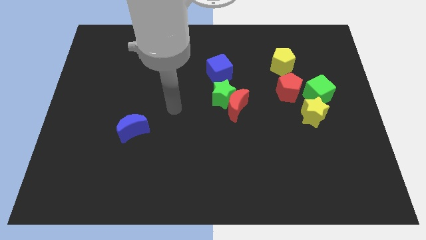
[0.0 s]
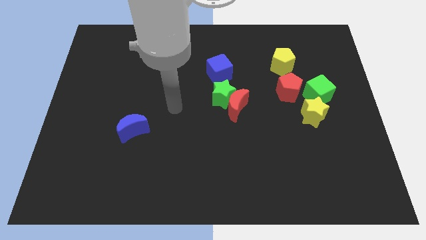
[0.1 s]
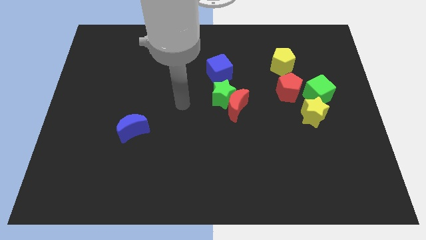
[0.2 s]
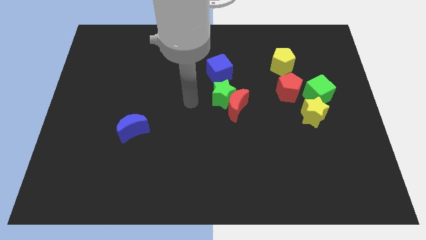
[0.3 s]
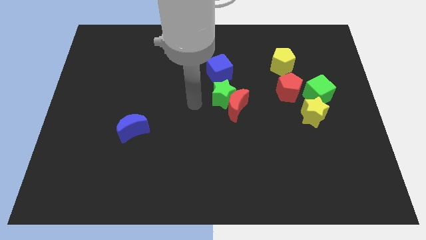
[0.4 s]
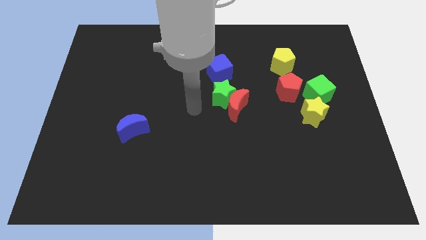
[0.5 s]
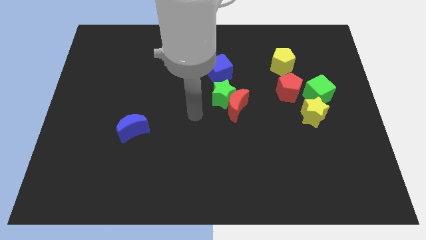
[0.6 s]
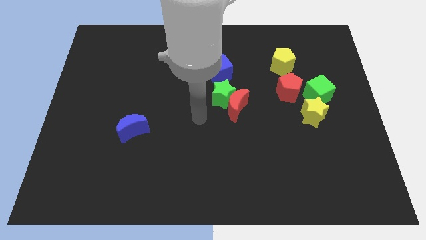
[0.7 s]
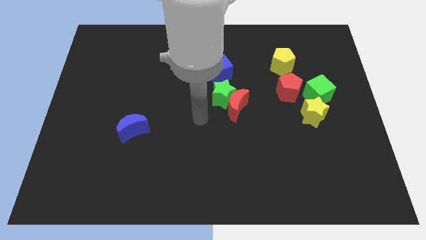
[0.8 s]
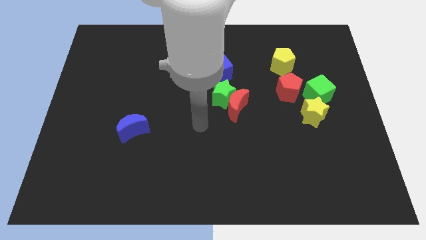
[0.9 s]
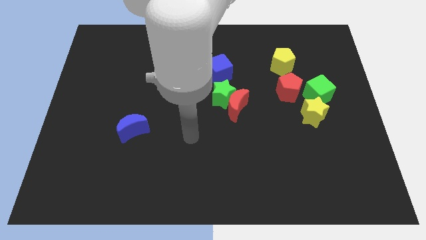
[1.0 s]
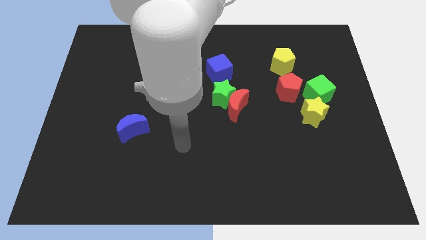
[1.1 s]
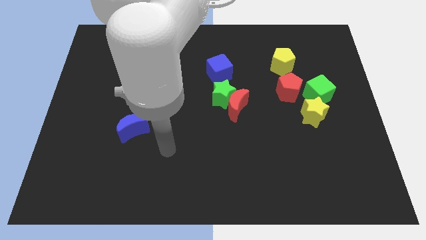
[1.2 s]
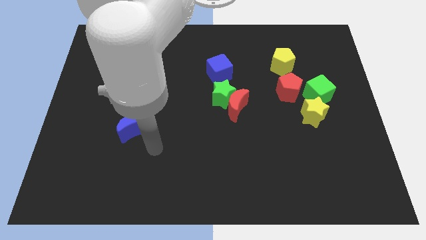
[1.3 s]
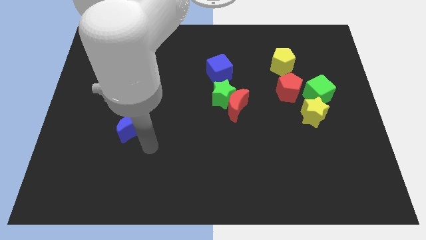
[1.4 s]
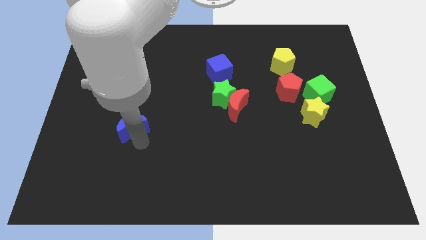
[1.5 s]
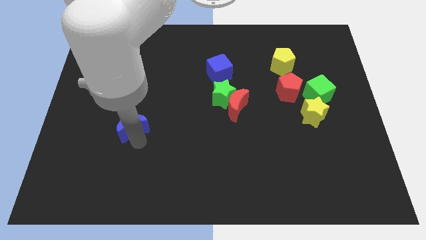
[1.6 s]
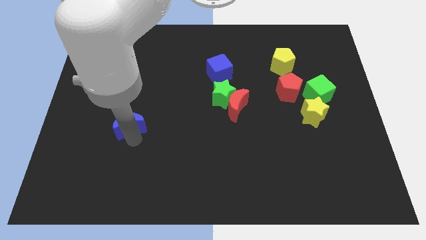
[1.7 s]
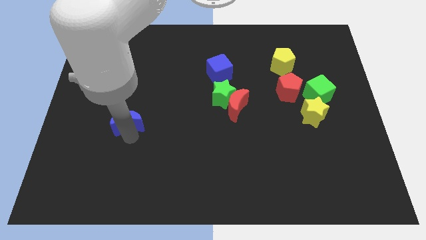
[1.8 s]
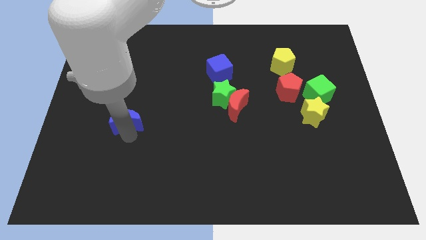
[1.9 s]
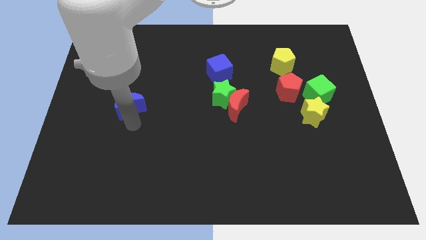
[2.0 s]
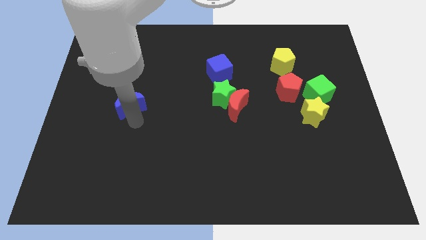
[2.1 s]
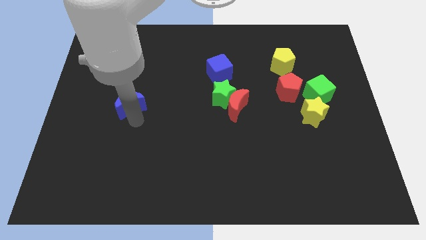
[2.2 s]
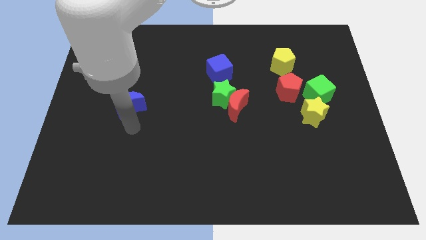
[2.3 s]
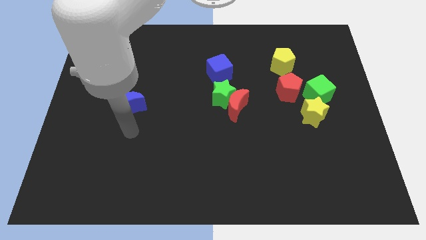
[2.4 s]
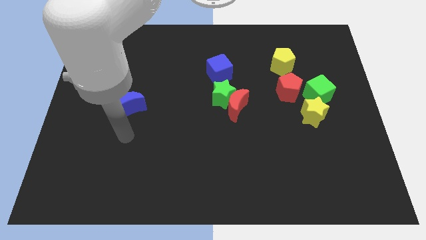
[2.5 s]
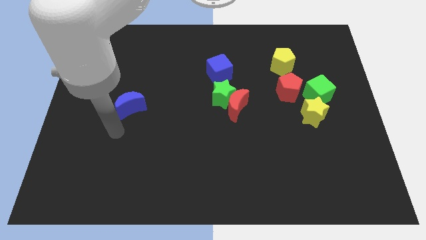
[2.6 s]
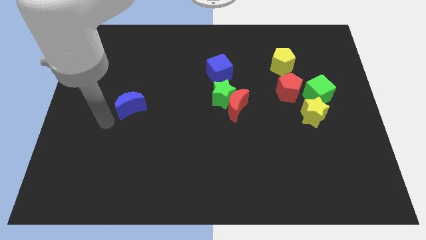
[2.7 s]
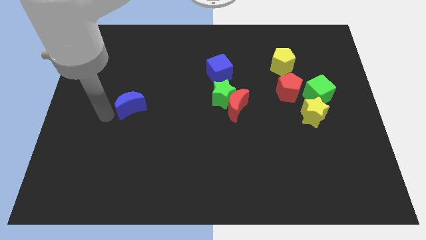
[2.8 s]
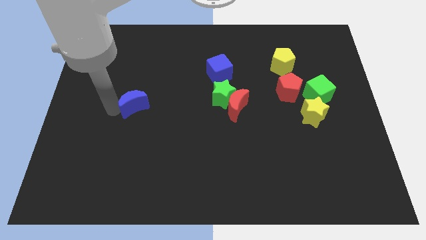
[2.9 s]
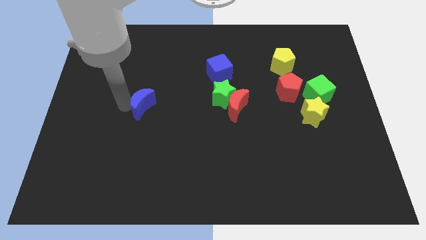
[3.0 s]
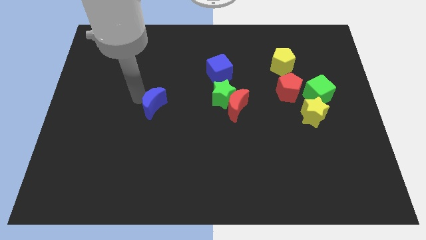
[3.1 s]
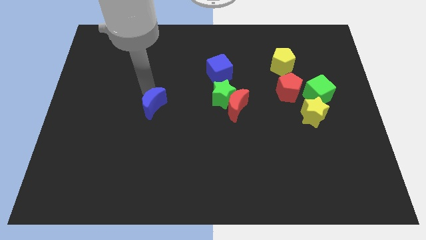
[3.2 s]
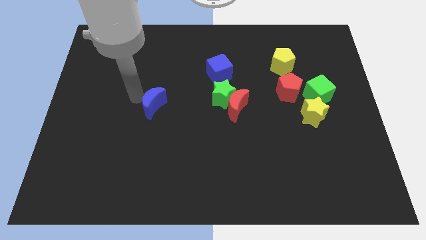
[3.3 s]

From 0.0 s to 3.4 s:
push the blue crescent towards the left side of the group of blocks

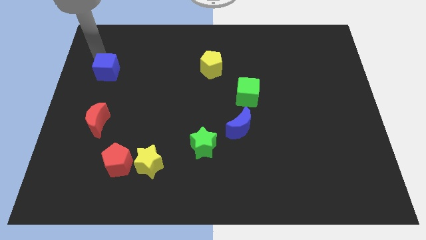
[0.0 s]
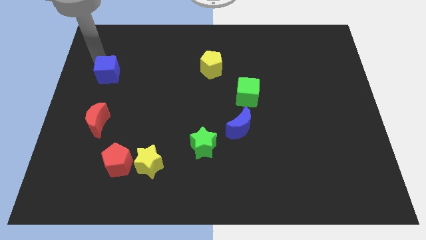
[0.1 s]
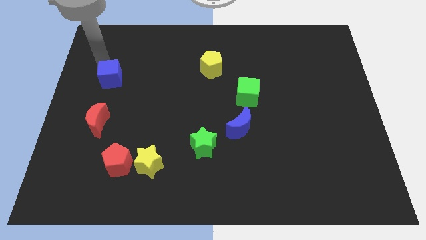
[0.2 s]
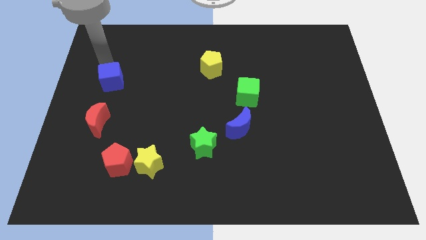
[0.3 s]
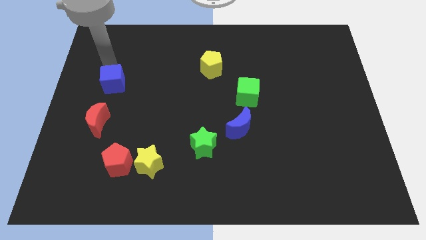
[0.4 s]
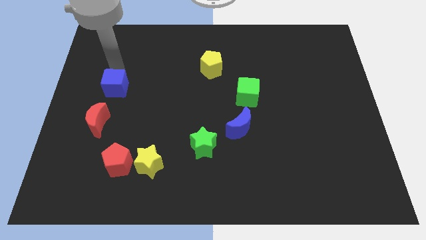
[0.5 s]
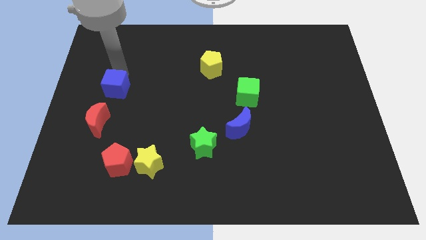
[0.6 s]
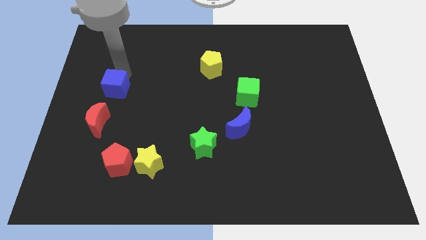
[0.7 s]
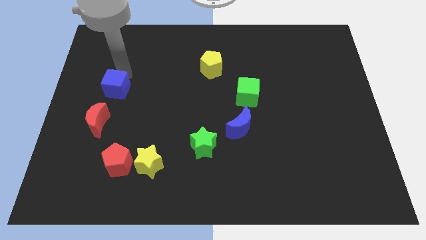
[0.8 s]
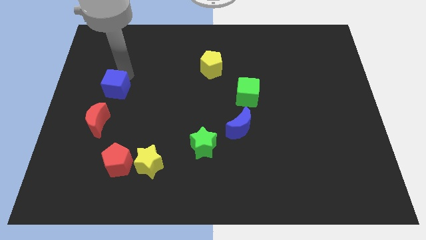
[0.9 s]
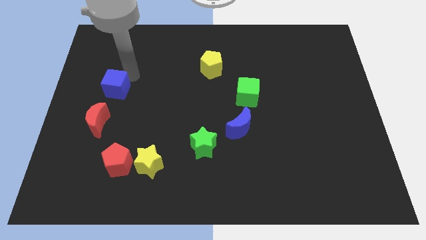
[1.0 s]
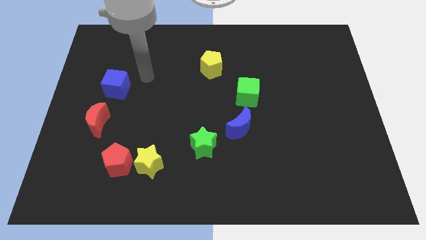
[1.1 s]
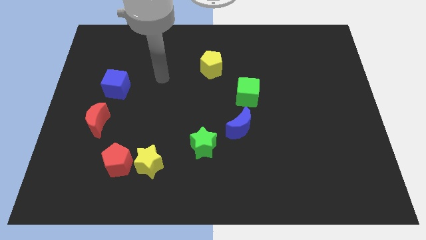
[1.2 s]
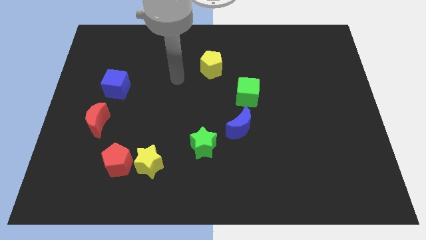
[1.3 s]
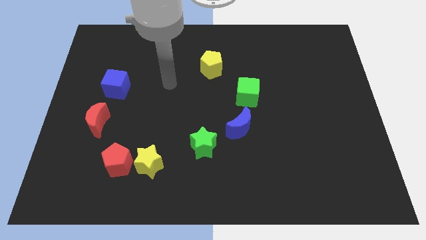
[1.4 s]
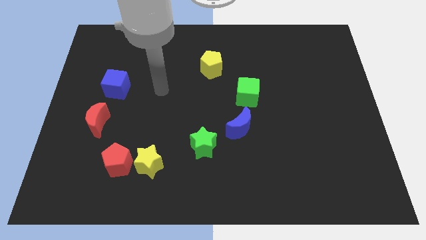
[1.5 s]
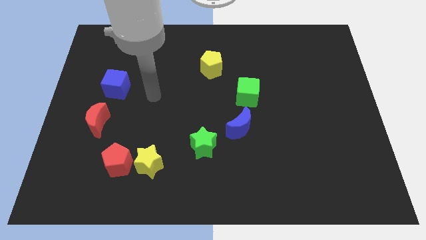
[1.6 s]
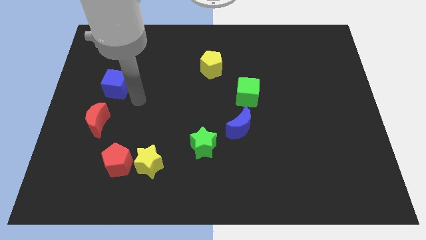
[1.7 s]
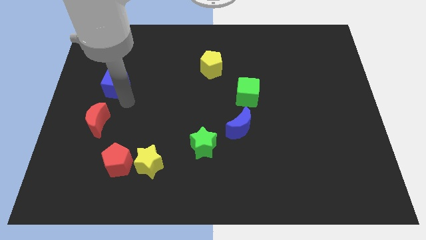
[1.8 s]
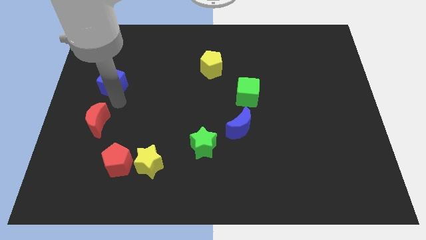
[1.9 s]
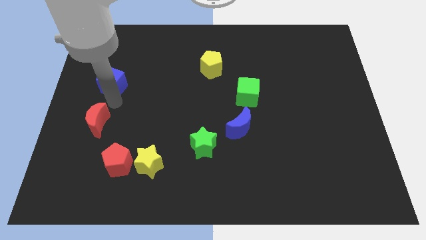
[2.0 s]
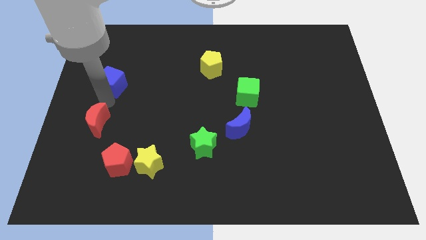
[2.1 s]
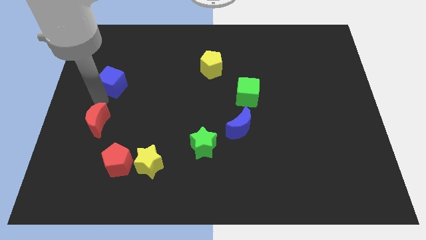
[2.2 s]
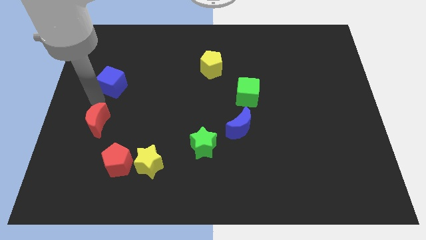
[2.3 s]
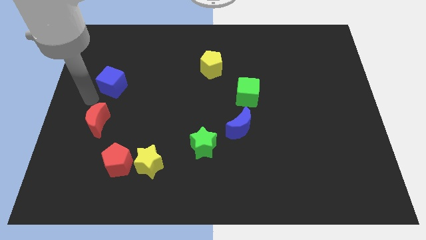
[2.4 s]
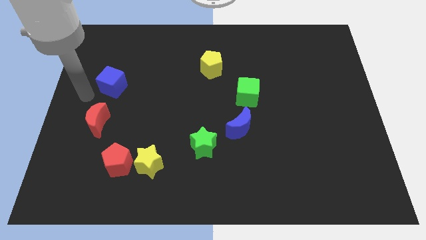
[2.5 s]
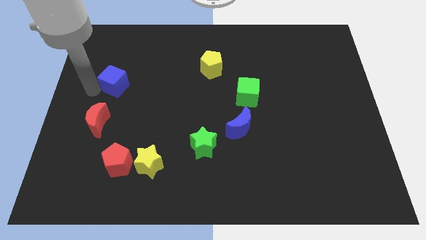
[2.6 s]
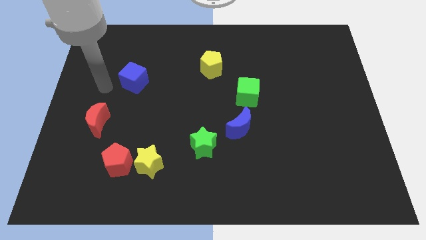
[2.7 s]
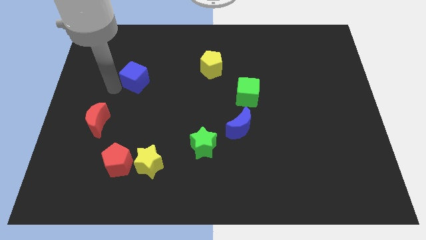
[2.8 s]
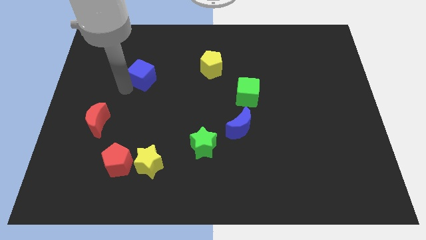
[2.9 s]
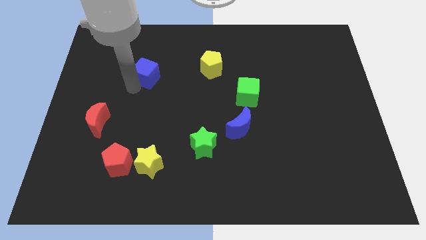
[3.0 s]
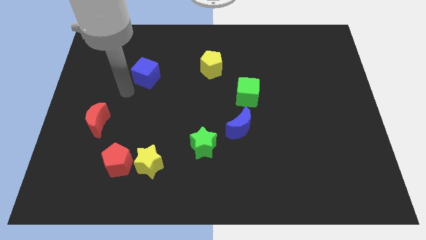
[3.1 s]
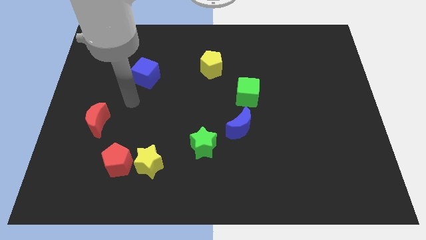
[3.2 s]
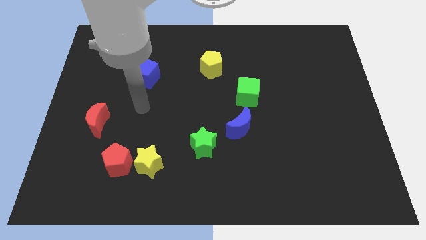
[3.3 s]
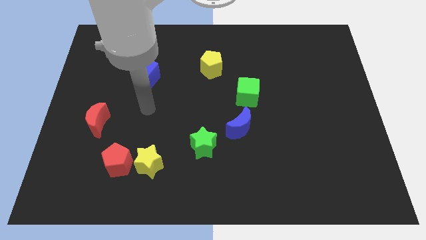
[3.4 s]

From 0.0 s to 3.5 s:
move the blue cube diagonal to the red moon

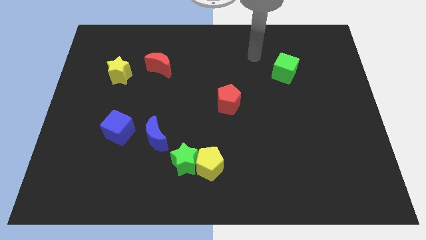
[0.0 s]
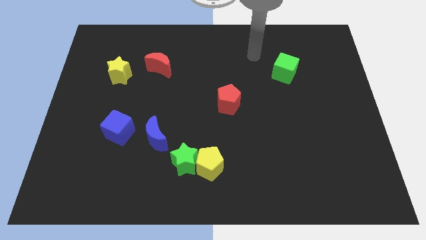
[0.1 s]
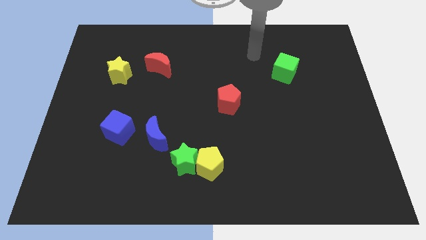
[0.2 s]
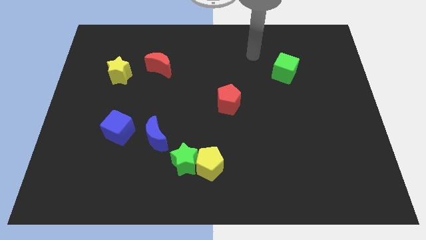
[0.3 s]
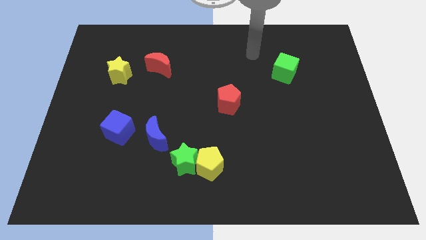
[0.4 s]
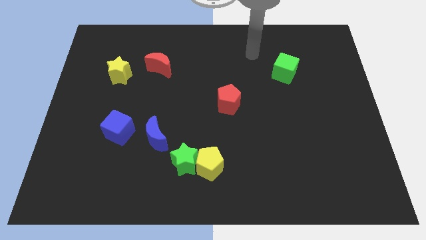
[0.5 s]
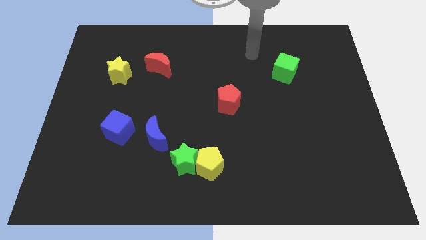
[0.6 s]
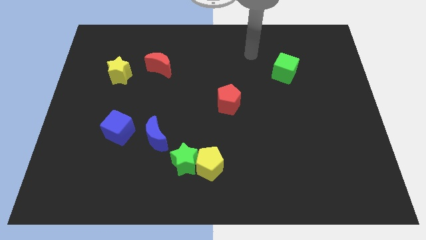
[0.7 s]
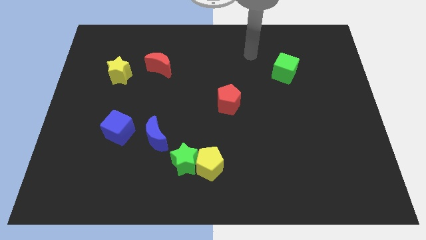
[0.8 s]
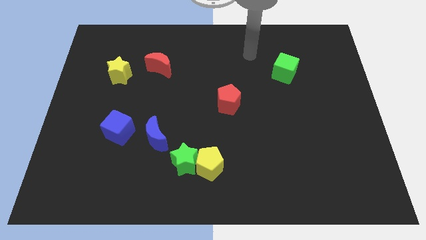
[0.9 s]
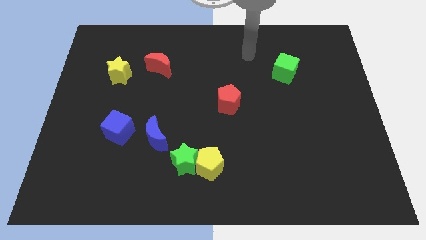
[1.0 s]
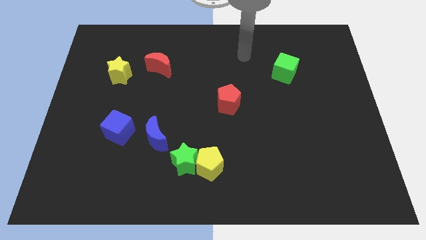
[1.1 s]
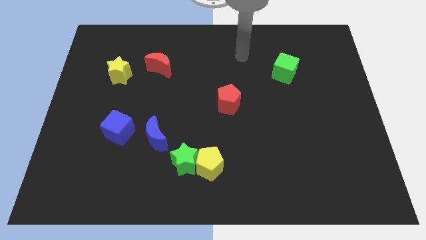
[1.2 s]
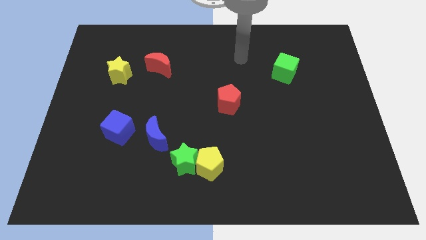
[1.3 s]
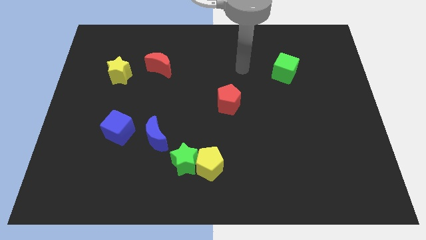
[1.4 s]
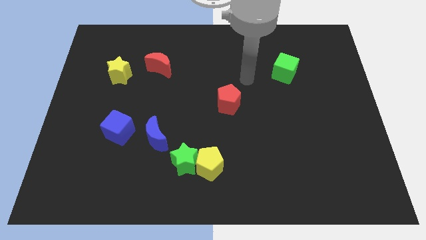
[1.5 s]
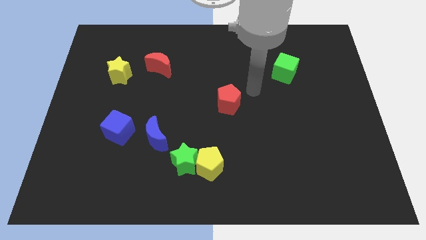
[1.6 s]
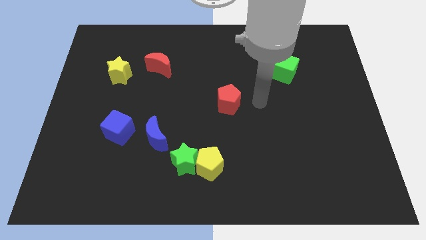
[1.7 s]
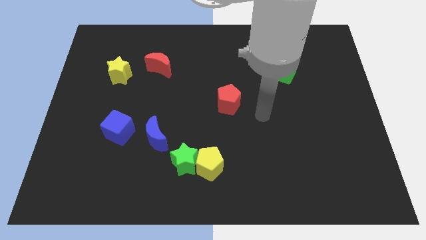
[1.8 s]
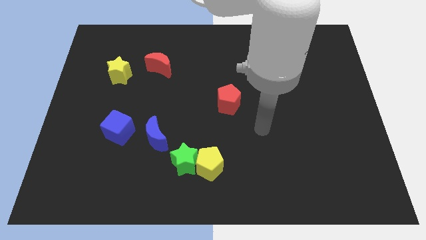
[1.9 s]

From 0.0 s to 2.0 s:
move your arm down a bit

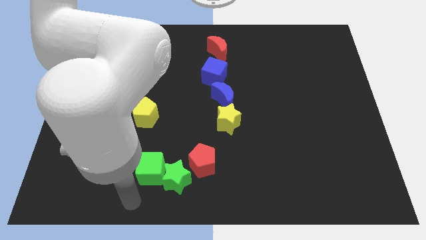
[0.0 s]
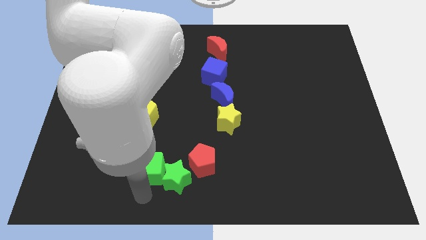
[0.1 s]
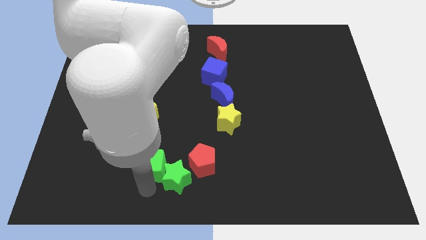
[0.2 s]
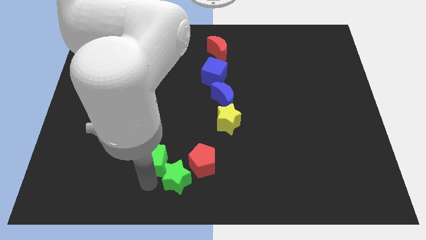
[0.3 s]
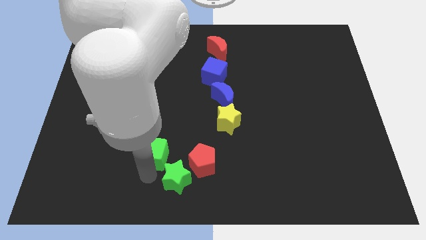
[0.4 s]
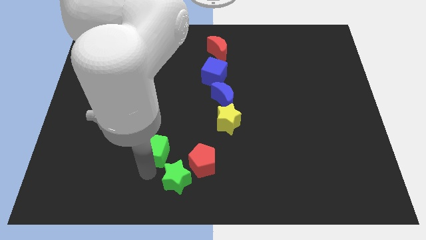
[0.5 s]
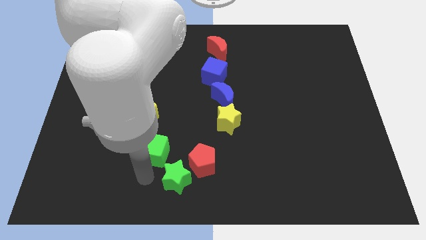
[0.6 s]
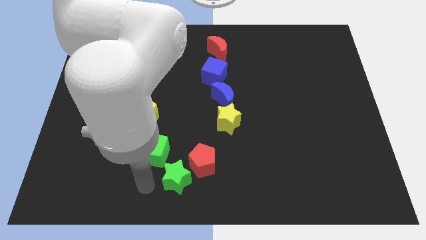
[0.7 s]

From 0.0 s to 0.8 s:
move the green cube slightly up
